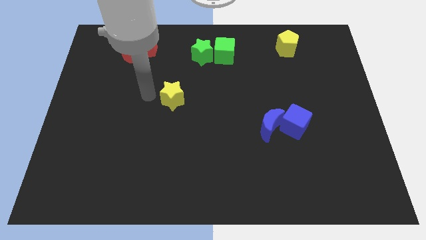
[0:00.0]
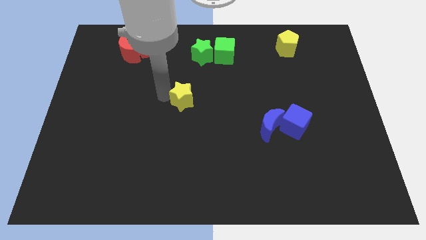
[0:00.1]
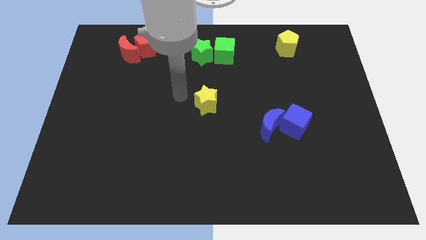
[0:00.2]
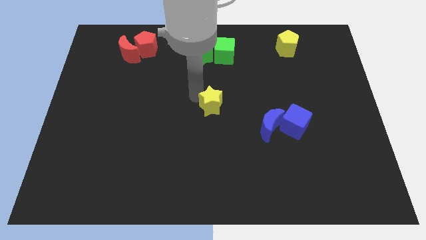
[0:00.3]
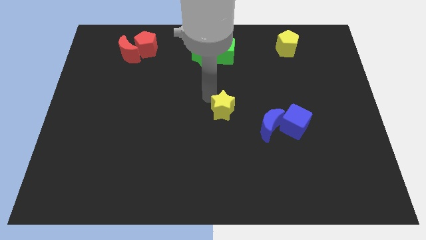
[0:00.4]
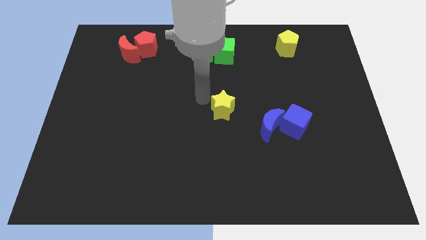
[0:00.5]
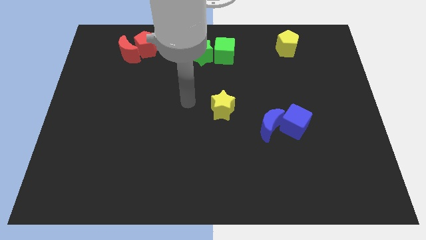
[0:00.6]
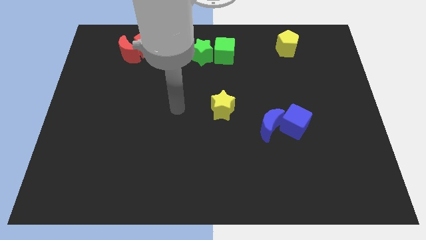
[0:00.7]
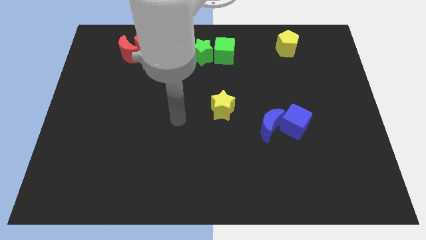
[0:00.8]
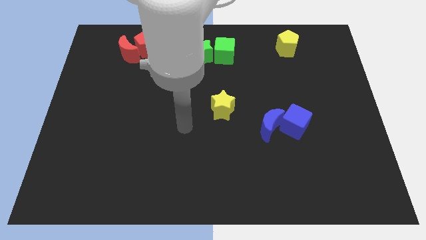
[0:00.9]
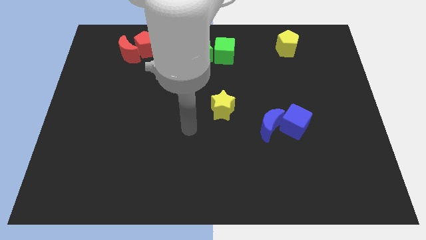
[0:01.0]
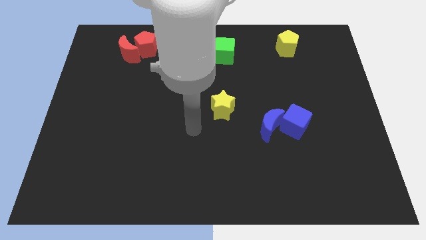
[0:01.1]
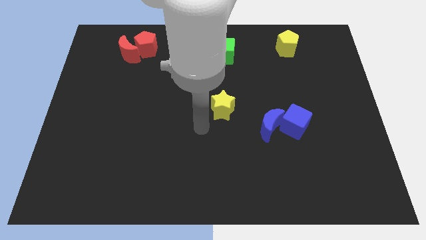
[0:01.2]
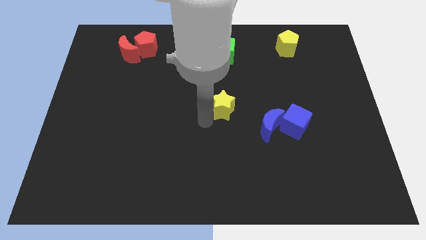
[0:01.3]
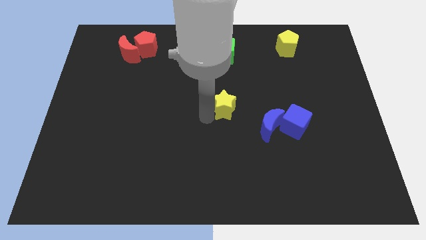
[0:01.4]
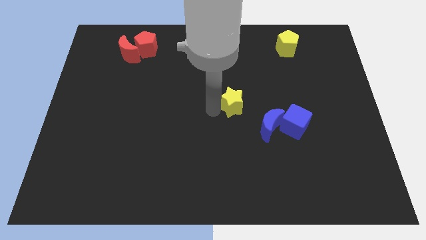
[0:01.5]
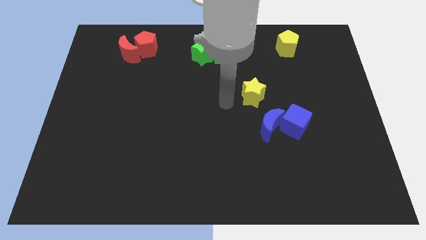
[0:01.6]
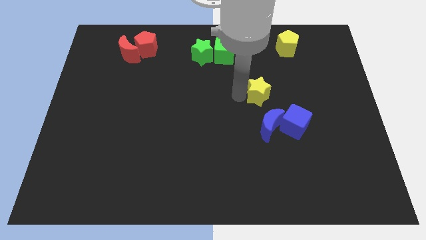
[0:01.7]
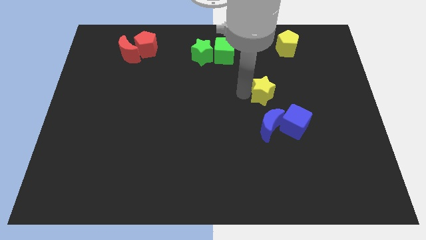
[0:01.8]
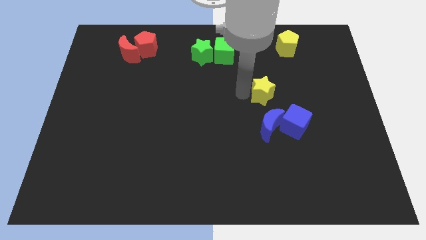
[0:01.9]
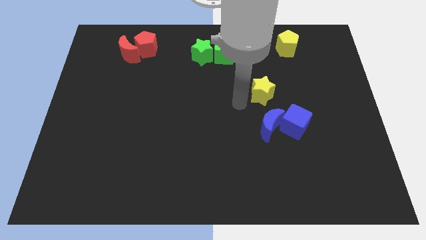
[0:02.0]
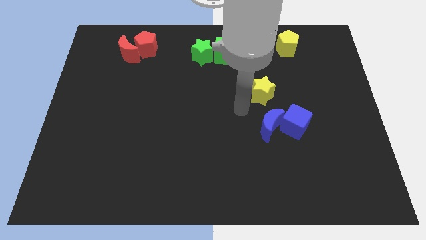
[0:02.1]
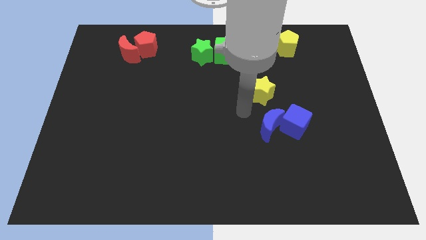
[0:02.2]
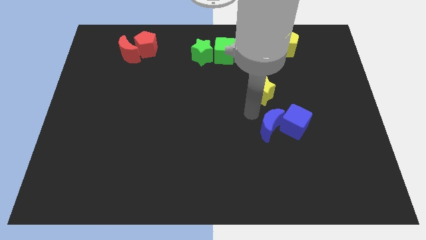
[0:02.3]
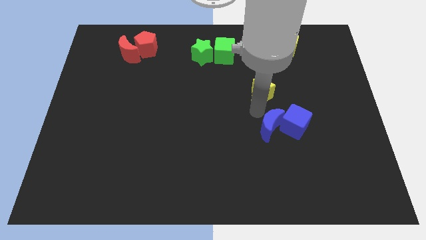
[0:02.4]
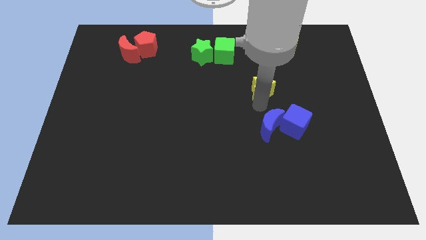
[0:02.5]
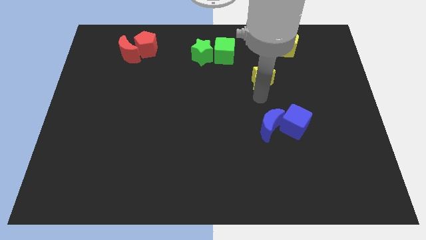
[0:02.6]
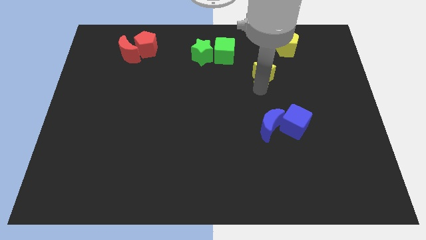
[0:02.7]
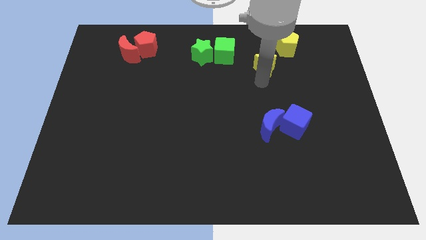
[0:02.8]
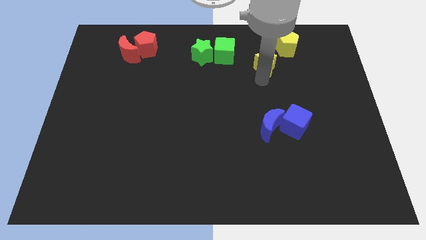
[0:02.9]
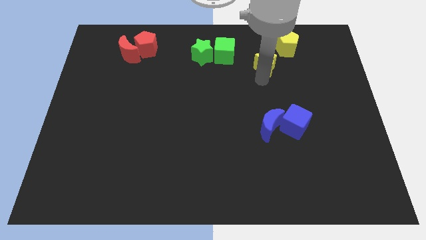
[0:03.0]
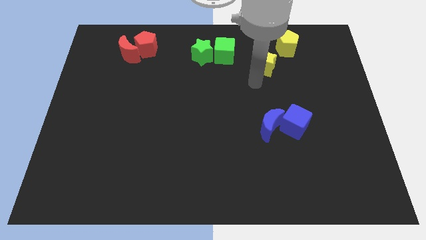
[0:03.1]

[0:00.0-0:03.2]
slide yellow star towards yellow pentagon

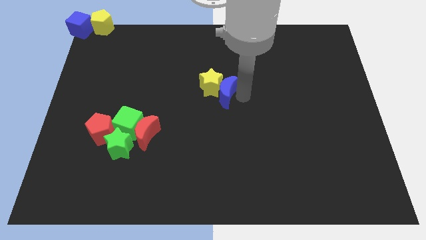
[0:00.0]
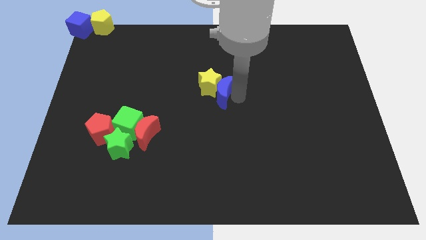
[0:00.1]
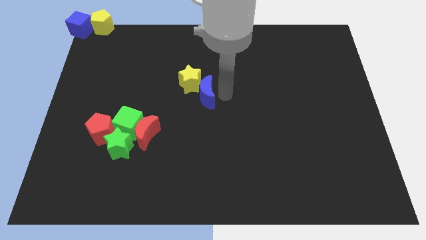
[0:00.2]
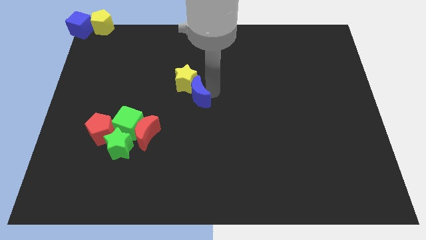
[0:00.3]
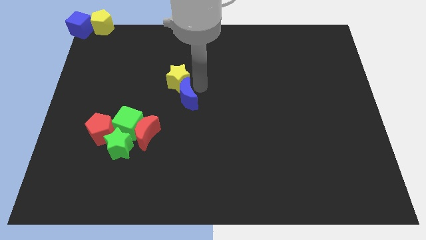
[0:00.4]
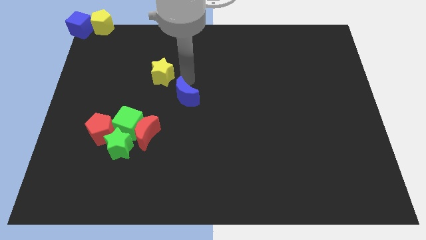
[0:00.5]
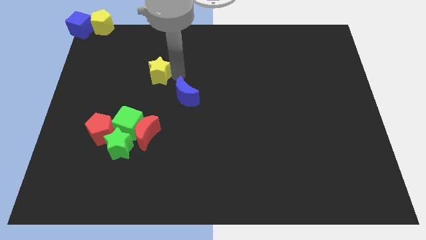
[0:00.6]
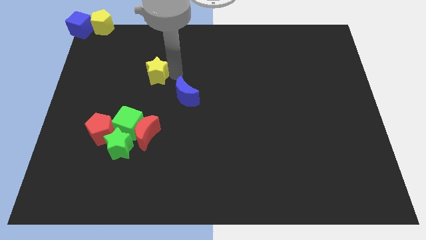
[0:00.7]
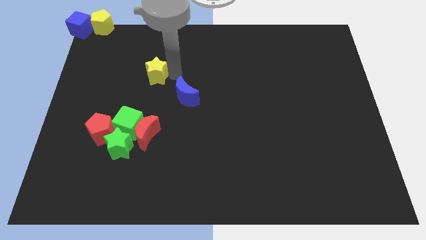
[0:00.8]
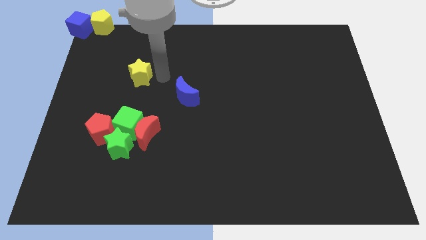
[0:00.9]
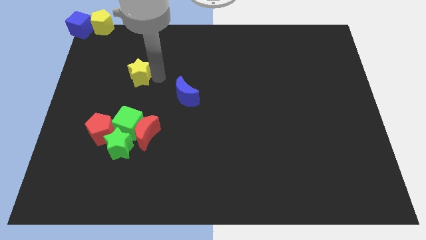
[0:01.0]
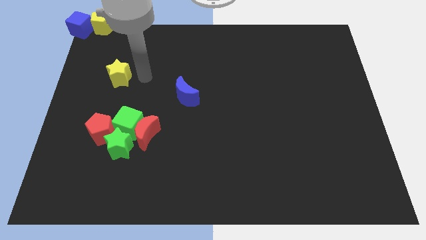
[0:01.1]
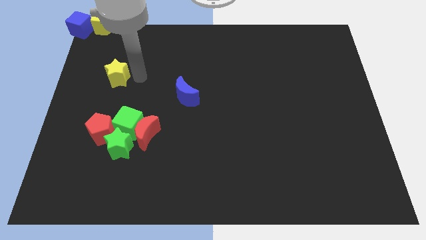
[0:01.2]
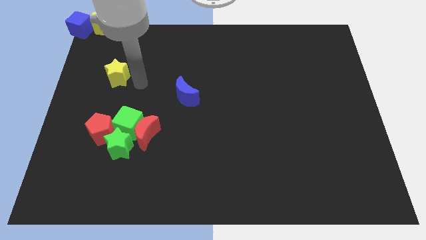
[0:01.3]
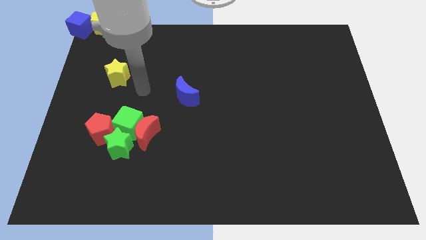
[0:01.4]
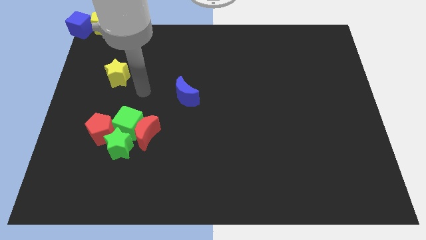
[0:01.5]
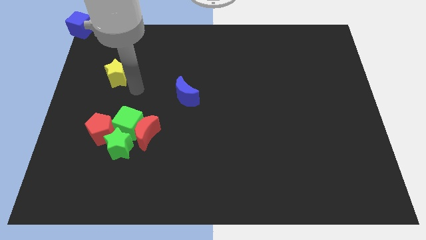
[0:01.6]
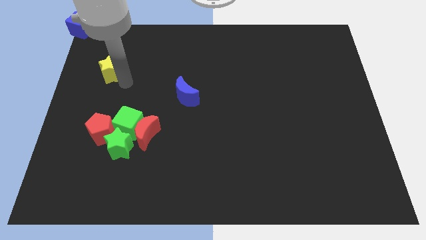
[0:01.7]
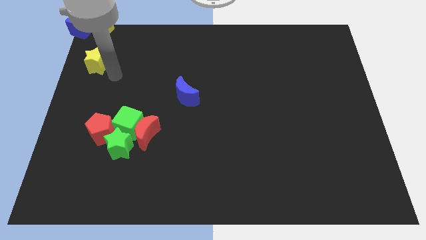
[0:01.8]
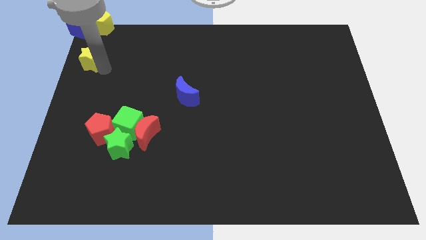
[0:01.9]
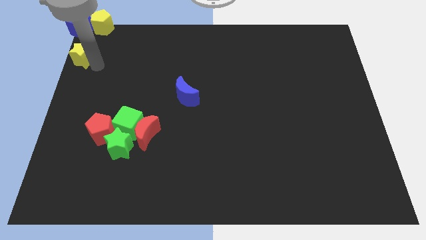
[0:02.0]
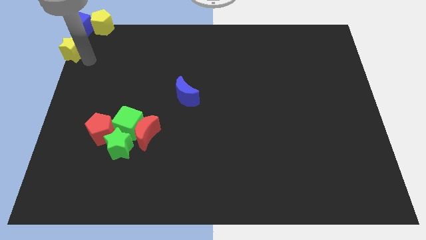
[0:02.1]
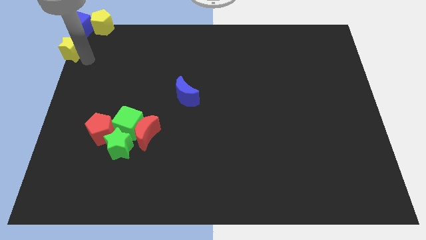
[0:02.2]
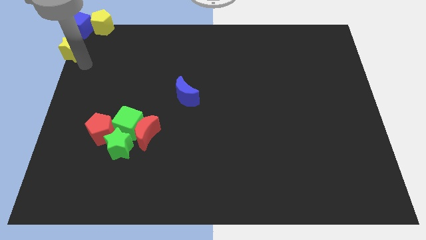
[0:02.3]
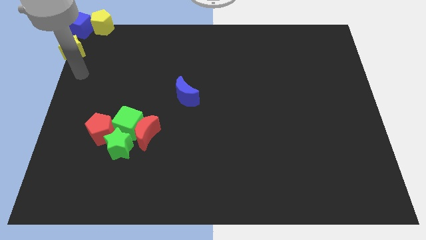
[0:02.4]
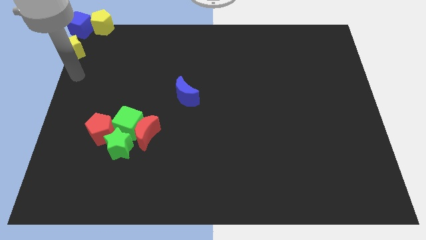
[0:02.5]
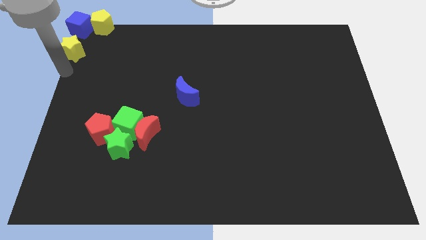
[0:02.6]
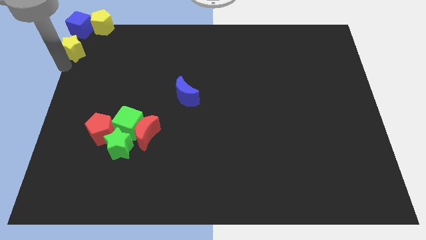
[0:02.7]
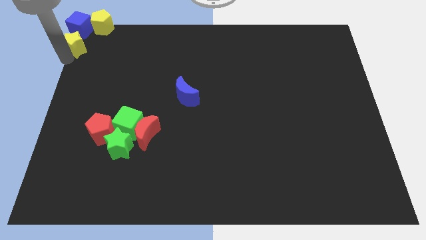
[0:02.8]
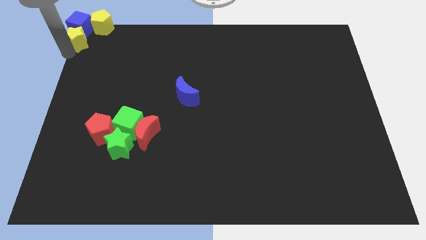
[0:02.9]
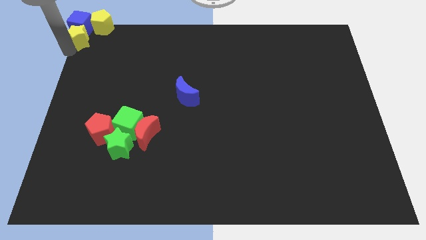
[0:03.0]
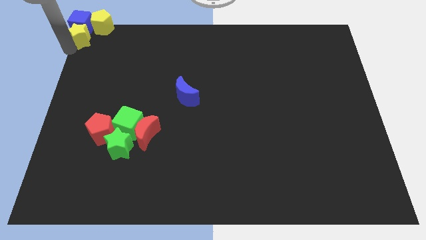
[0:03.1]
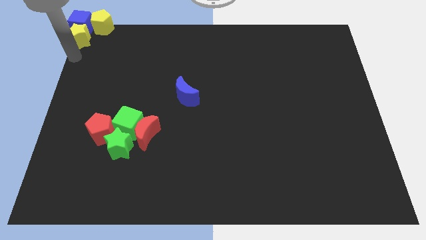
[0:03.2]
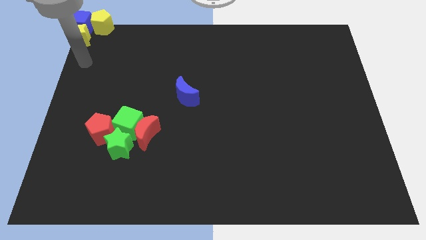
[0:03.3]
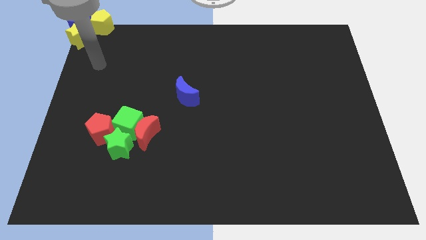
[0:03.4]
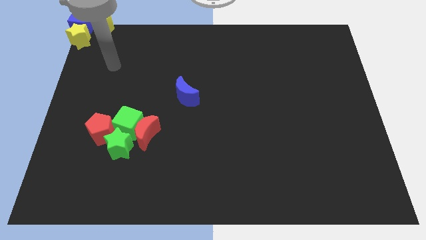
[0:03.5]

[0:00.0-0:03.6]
push the yellow star to the bottom side of the blue cube

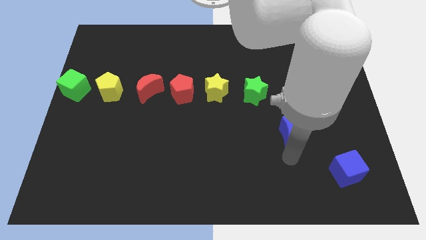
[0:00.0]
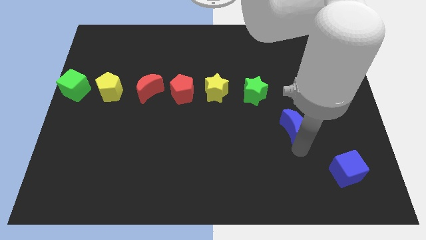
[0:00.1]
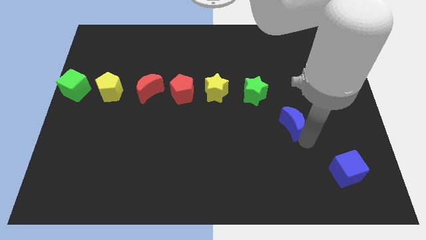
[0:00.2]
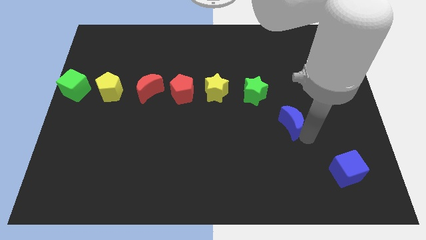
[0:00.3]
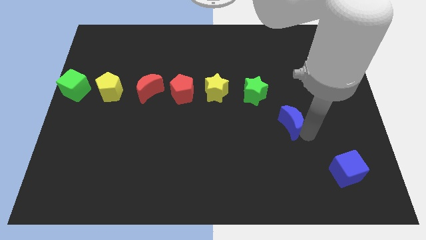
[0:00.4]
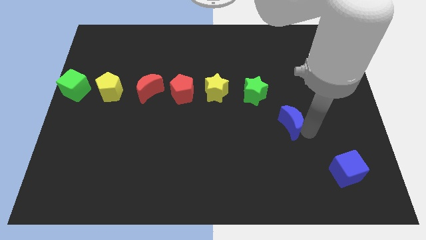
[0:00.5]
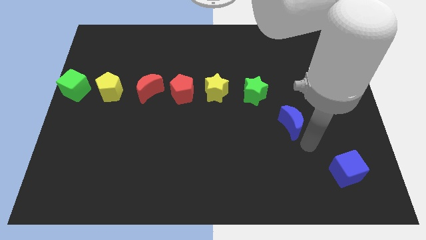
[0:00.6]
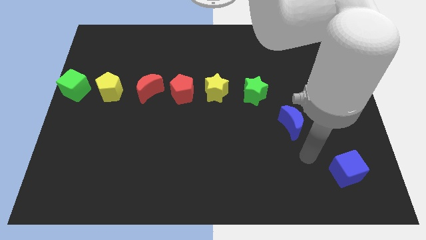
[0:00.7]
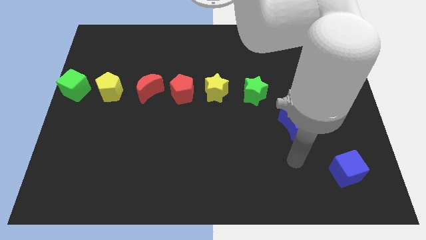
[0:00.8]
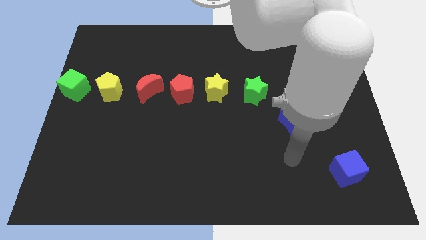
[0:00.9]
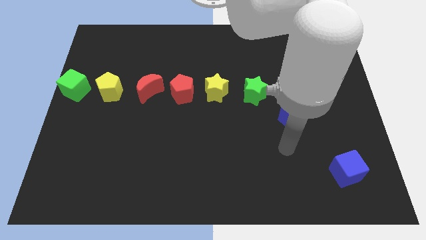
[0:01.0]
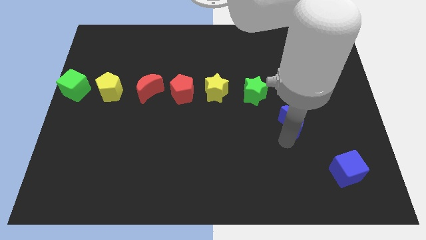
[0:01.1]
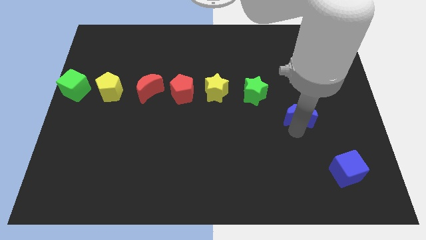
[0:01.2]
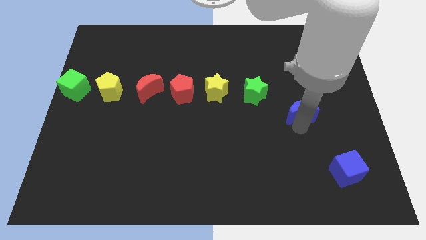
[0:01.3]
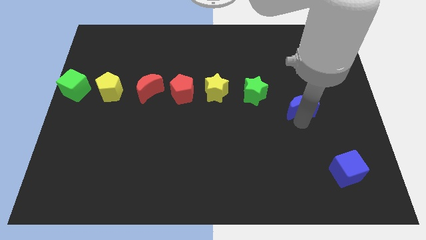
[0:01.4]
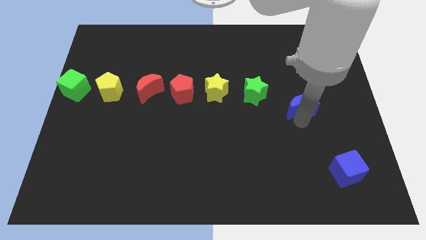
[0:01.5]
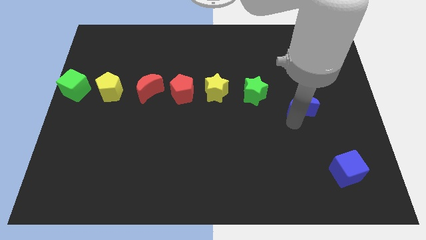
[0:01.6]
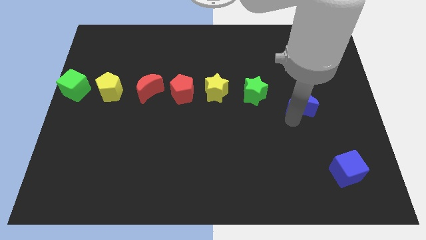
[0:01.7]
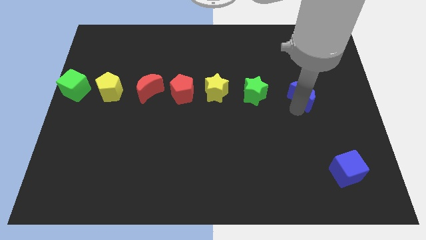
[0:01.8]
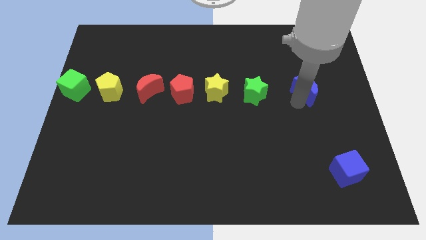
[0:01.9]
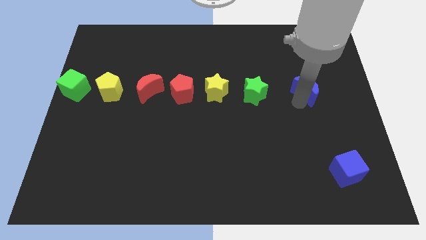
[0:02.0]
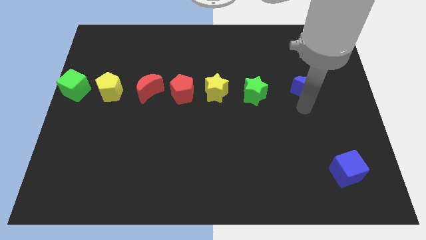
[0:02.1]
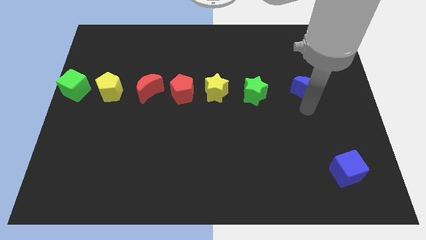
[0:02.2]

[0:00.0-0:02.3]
push the blue moon towards top side
